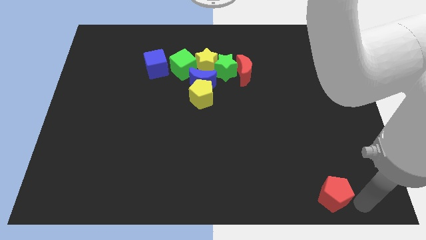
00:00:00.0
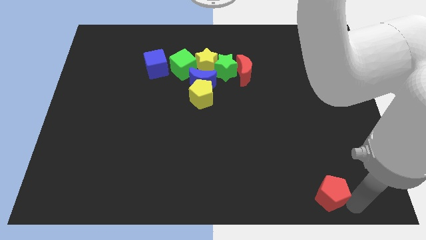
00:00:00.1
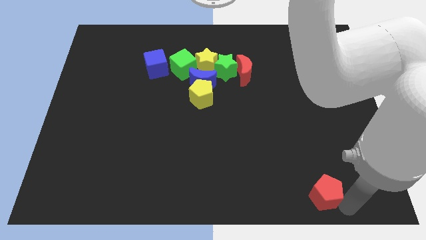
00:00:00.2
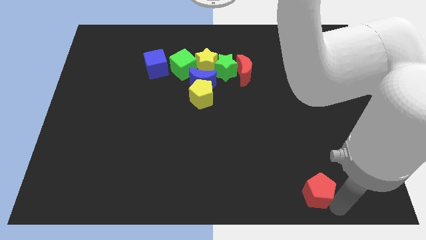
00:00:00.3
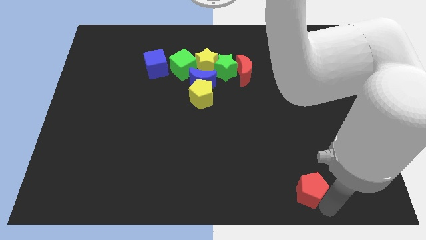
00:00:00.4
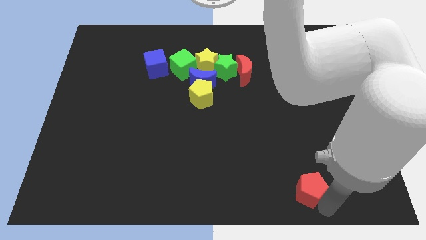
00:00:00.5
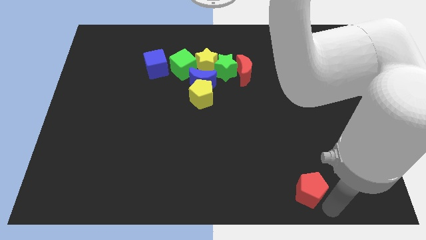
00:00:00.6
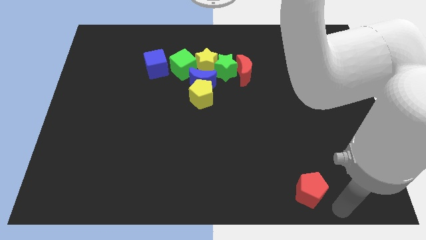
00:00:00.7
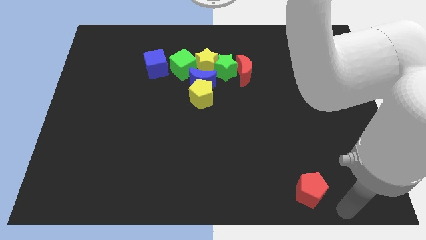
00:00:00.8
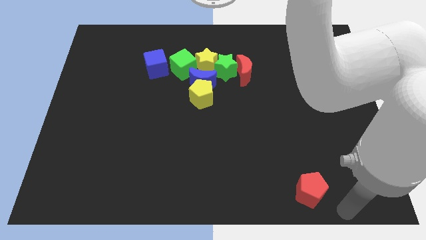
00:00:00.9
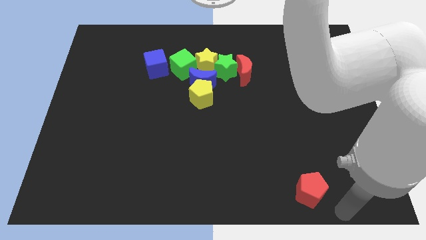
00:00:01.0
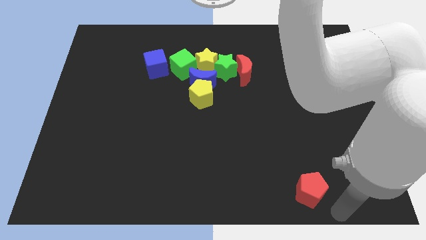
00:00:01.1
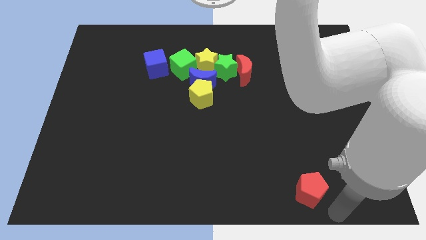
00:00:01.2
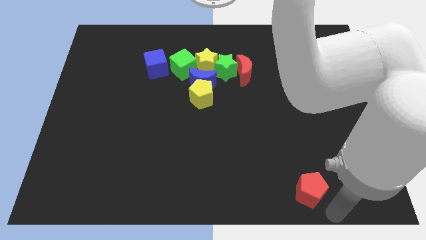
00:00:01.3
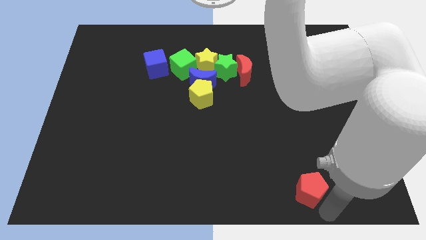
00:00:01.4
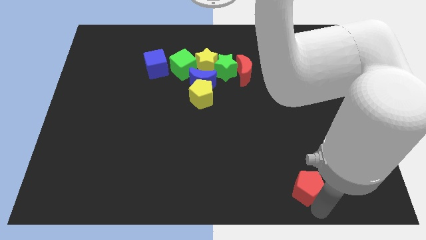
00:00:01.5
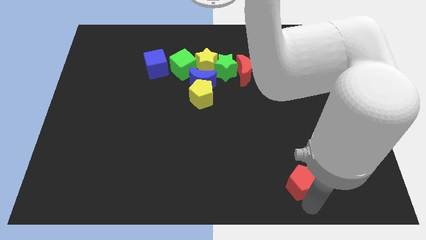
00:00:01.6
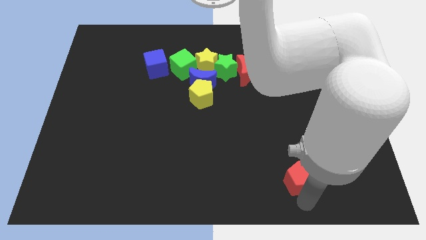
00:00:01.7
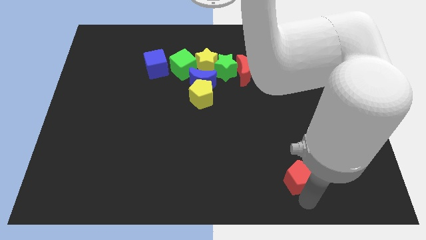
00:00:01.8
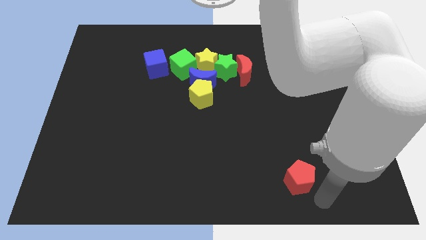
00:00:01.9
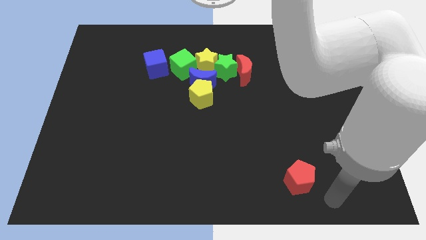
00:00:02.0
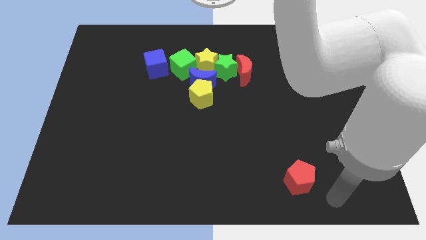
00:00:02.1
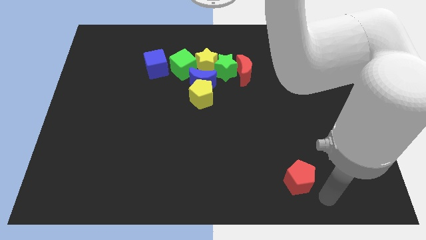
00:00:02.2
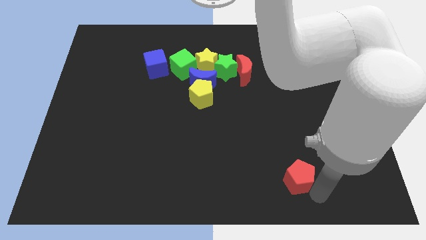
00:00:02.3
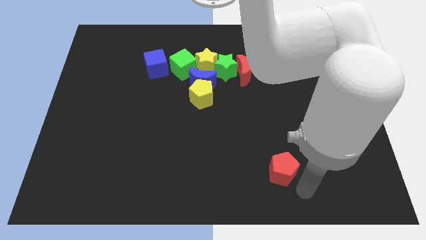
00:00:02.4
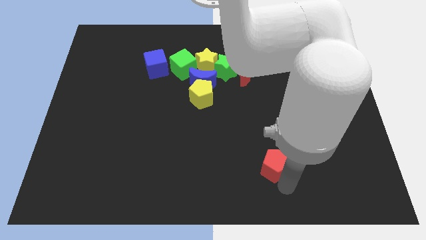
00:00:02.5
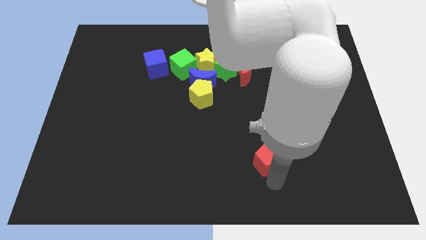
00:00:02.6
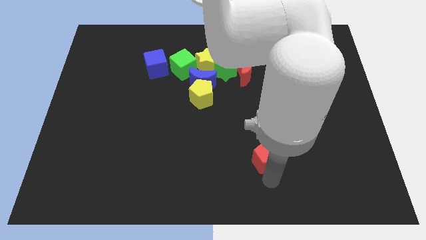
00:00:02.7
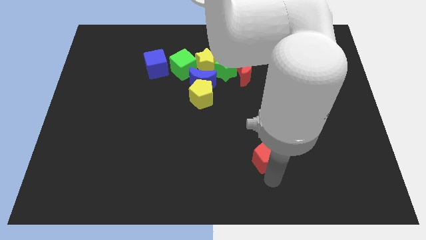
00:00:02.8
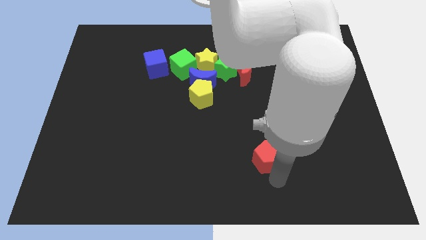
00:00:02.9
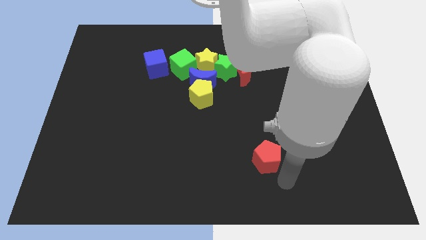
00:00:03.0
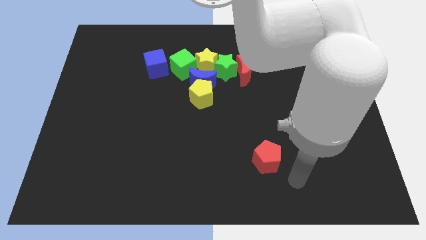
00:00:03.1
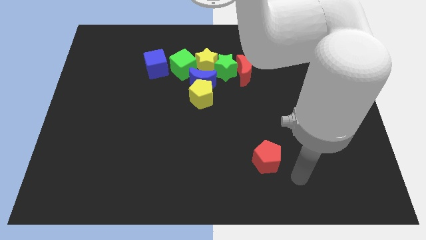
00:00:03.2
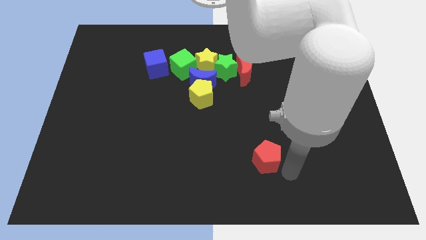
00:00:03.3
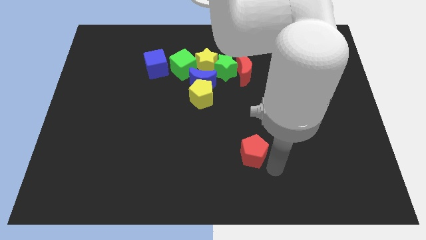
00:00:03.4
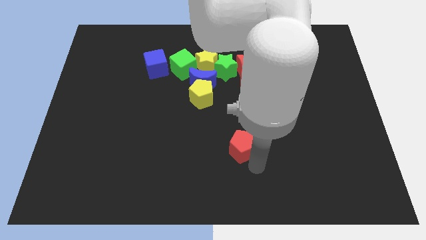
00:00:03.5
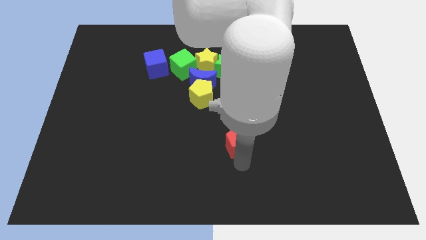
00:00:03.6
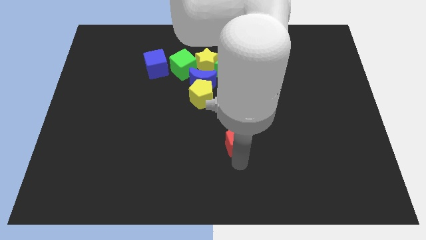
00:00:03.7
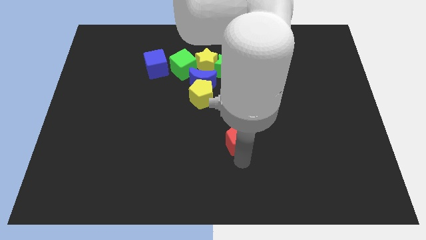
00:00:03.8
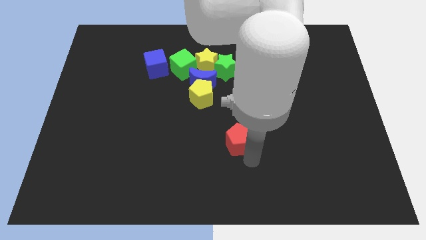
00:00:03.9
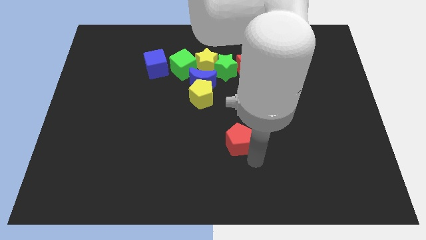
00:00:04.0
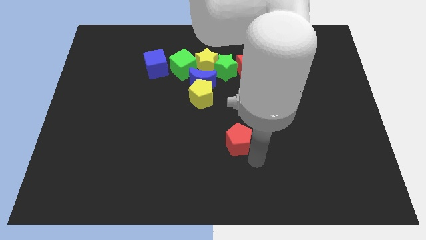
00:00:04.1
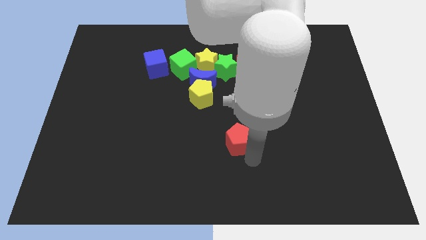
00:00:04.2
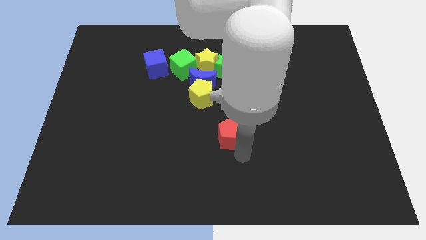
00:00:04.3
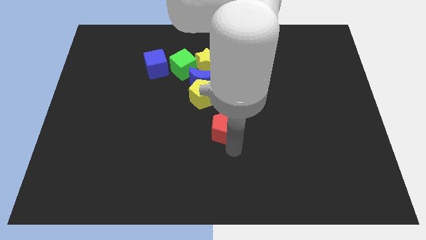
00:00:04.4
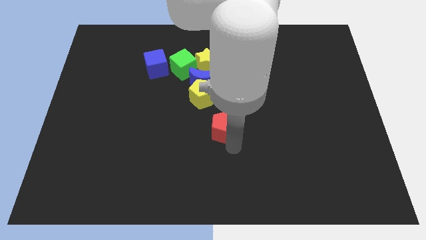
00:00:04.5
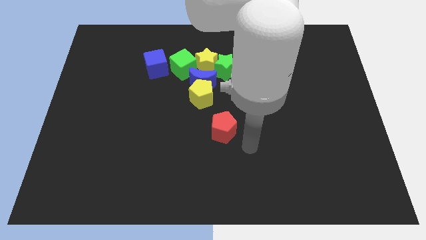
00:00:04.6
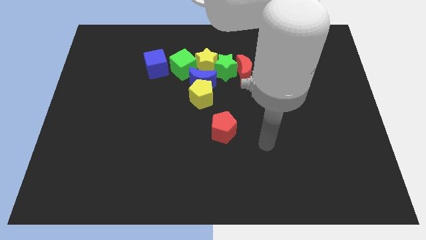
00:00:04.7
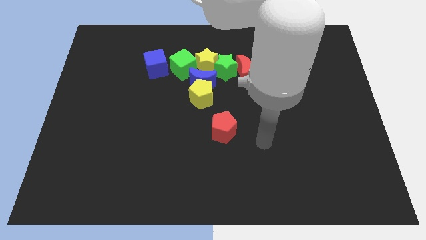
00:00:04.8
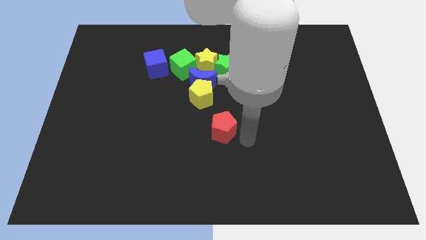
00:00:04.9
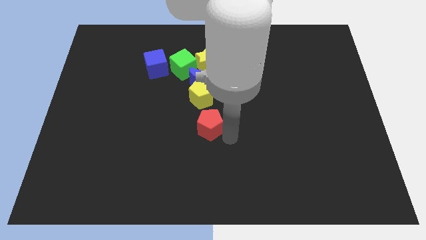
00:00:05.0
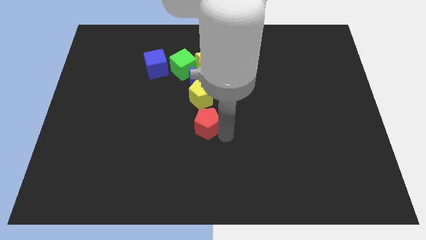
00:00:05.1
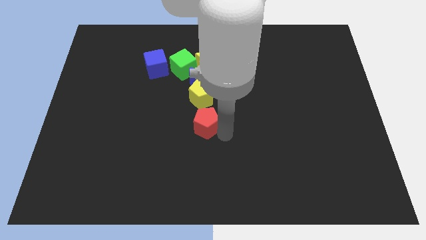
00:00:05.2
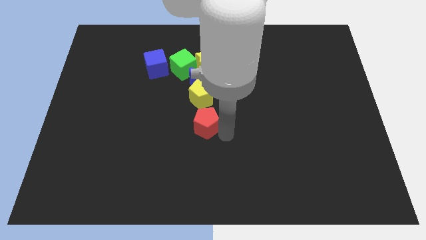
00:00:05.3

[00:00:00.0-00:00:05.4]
push the red pentagon to the bottom of the yellow pentagon

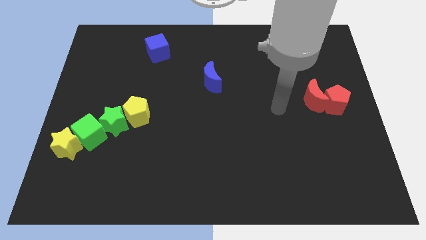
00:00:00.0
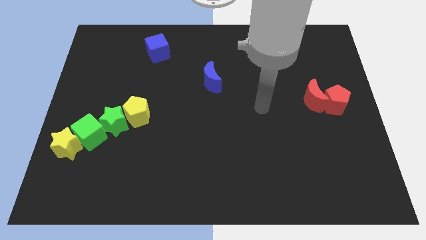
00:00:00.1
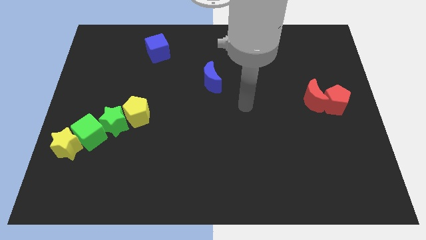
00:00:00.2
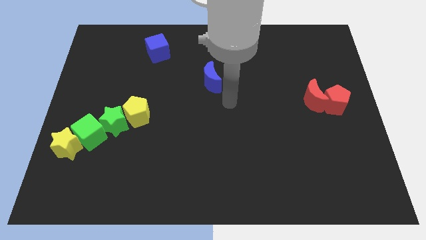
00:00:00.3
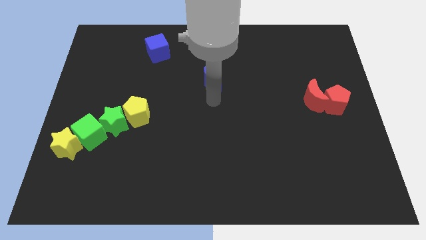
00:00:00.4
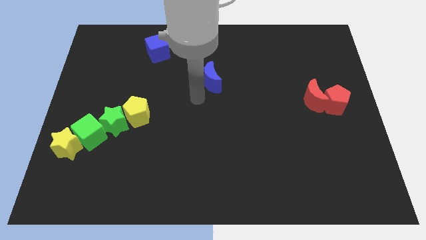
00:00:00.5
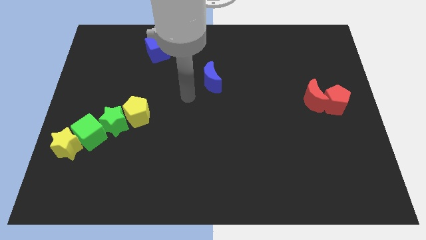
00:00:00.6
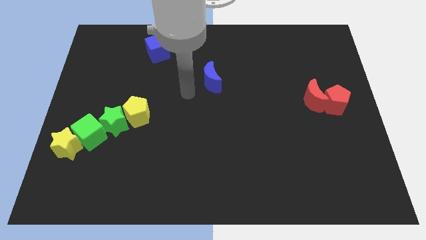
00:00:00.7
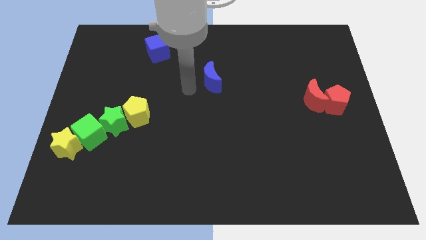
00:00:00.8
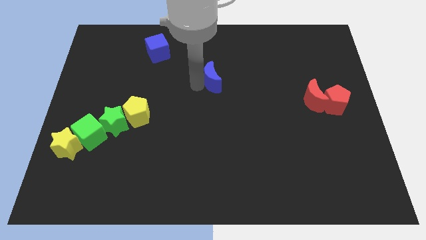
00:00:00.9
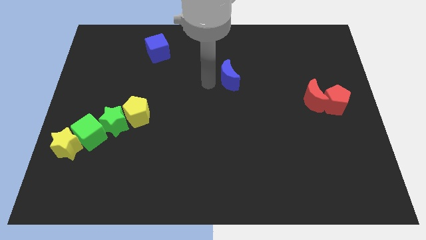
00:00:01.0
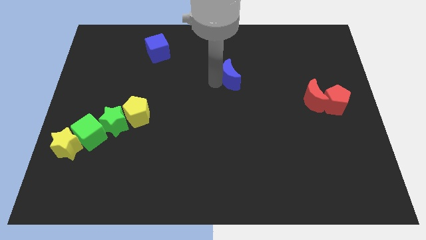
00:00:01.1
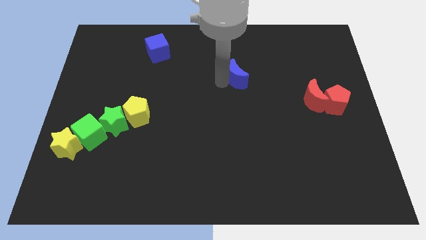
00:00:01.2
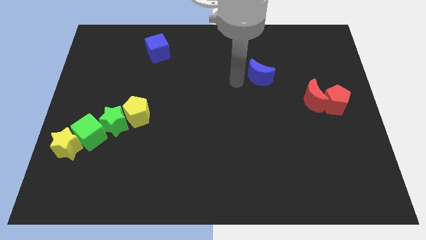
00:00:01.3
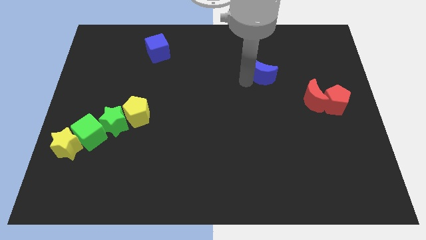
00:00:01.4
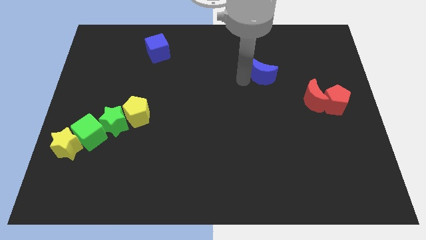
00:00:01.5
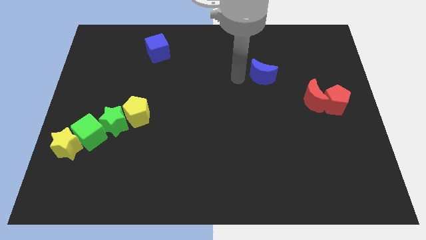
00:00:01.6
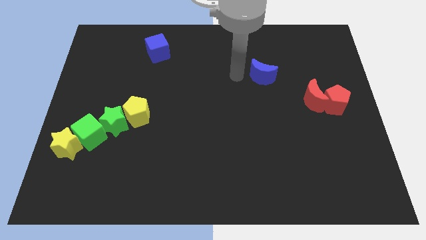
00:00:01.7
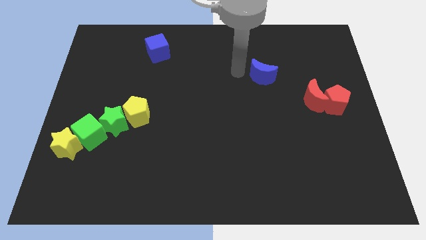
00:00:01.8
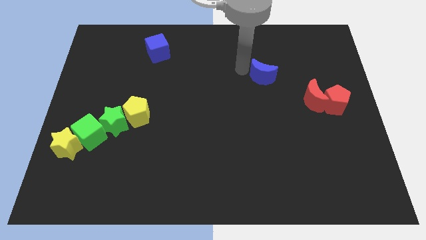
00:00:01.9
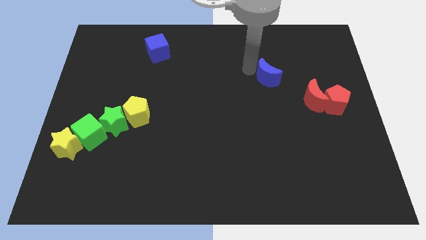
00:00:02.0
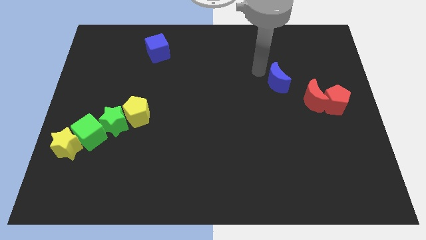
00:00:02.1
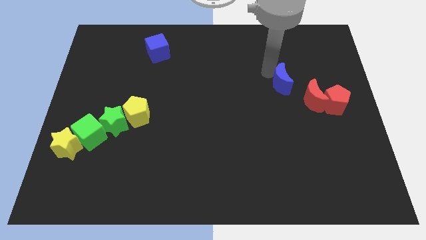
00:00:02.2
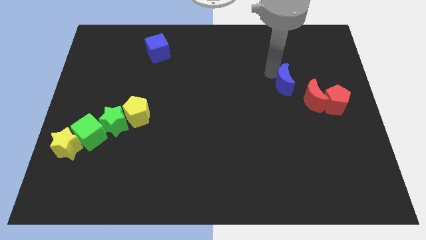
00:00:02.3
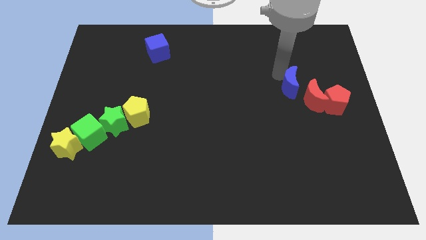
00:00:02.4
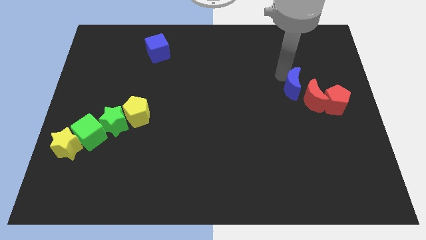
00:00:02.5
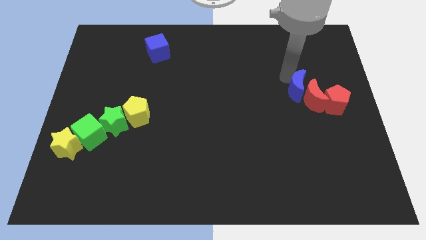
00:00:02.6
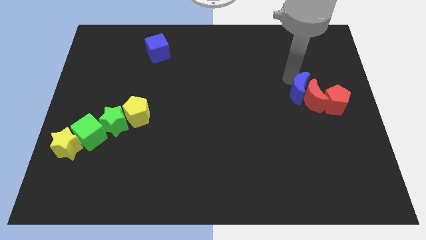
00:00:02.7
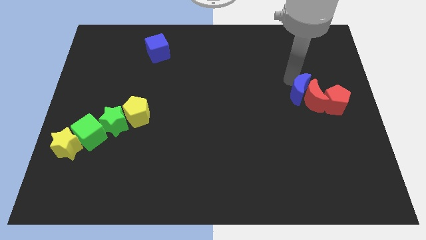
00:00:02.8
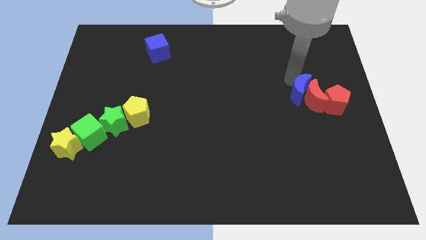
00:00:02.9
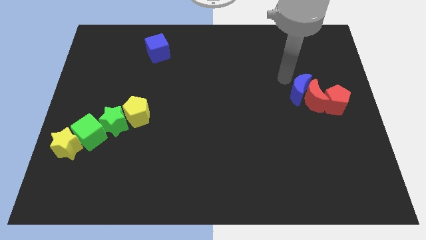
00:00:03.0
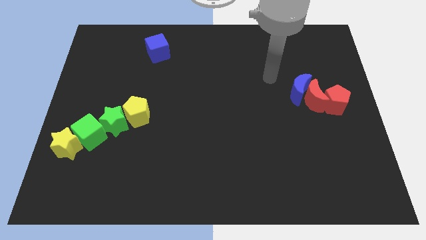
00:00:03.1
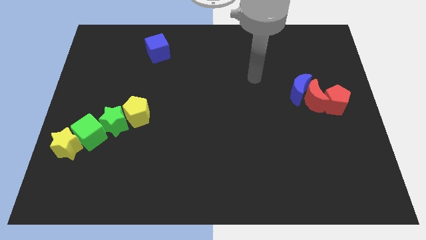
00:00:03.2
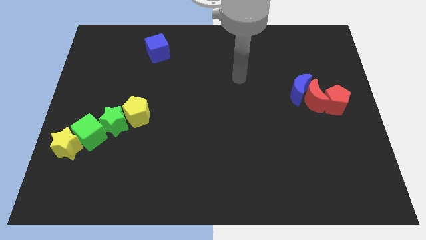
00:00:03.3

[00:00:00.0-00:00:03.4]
move the blue moon into the red moon
